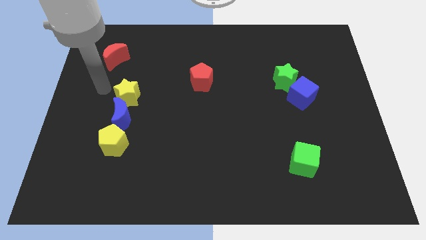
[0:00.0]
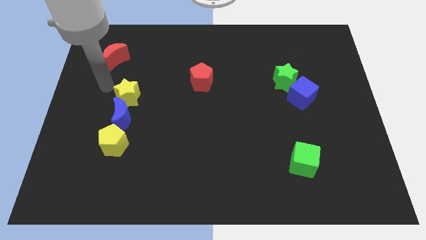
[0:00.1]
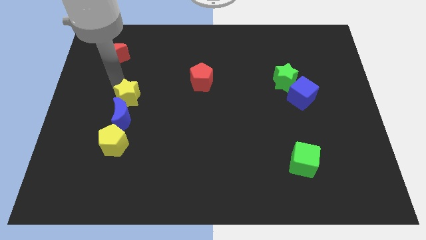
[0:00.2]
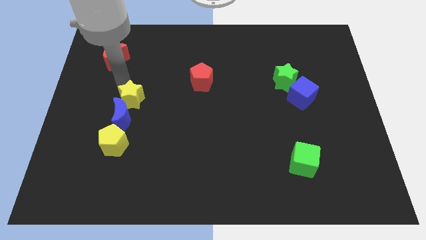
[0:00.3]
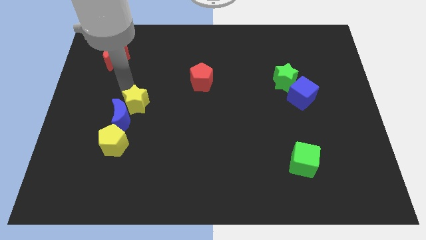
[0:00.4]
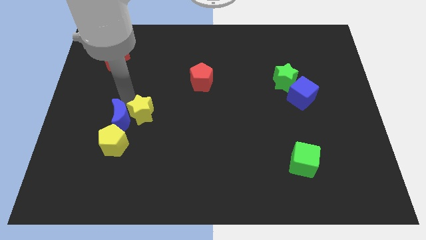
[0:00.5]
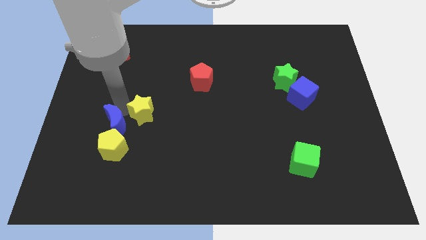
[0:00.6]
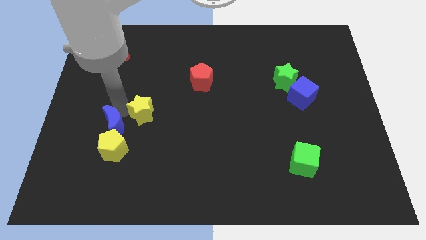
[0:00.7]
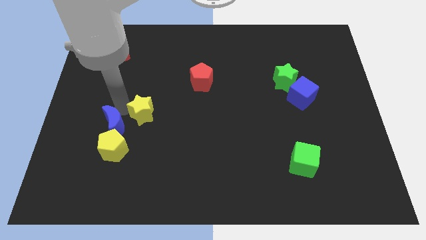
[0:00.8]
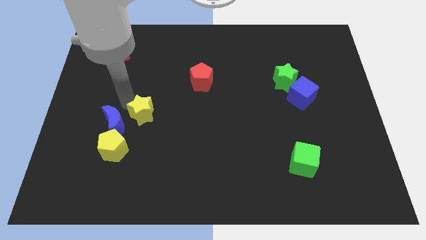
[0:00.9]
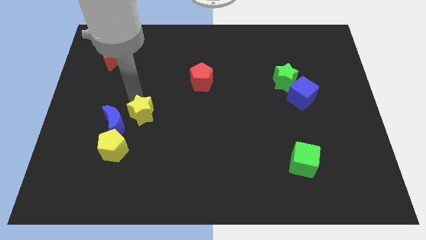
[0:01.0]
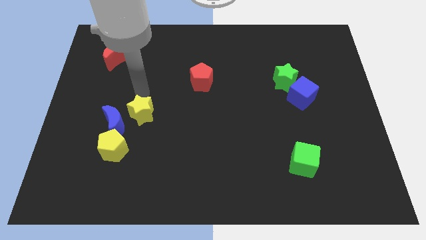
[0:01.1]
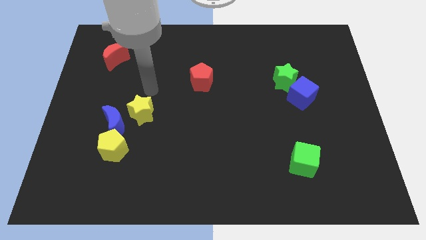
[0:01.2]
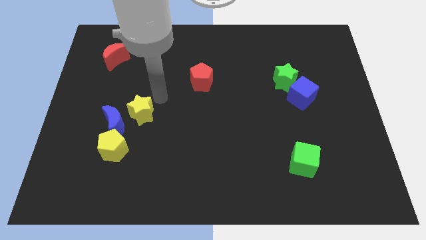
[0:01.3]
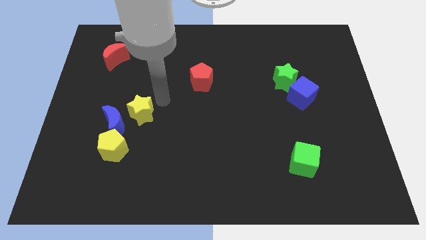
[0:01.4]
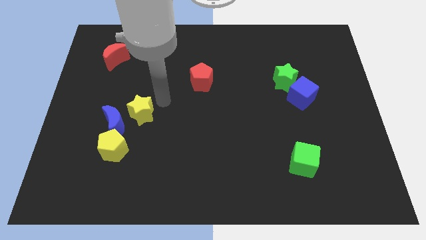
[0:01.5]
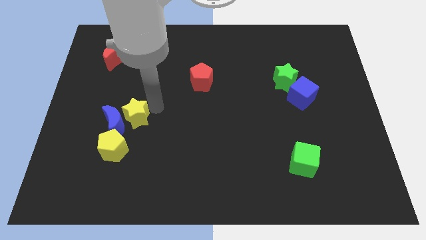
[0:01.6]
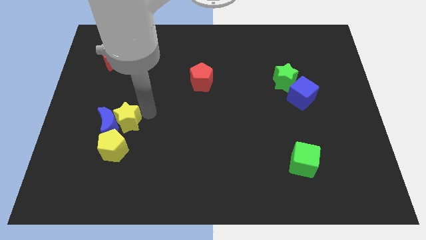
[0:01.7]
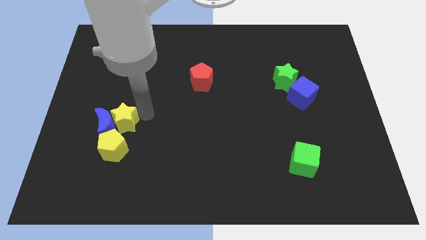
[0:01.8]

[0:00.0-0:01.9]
move yellow star into the blue moon

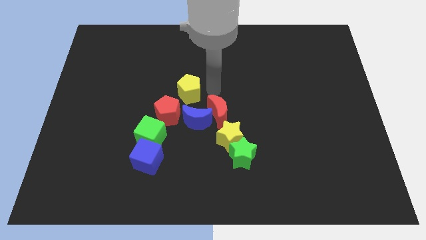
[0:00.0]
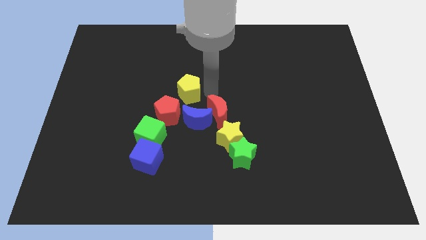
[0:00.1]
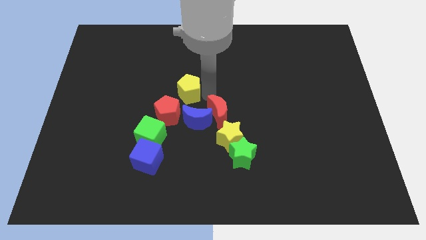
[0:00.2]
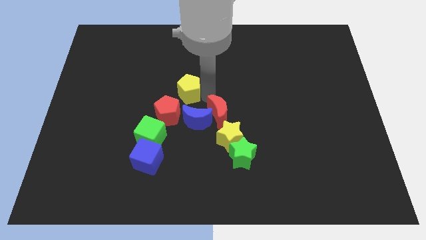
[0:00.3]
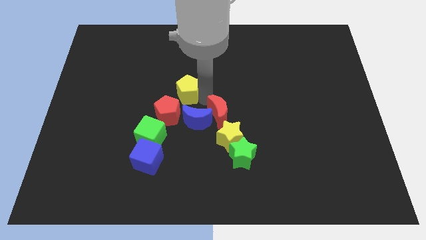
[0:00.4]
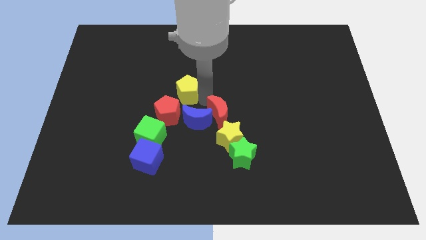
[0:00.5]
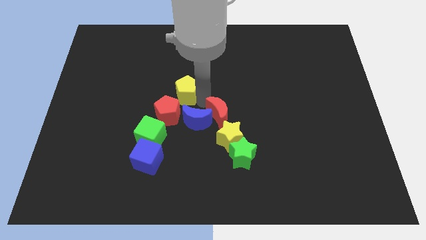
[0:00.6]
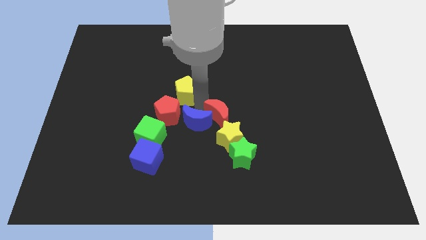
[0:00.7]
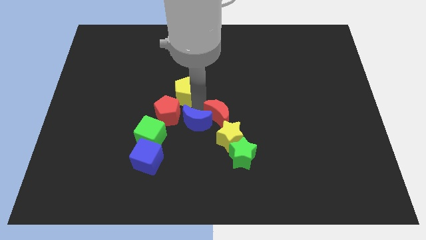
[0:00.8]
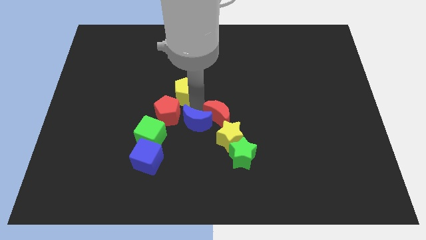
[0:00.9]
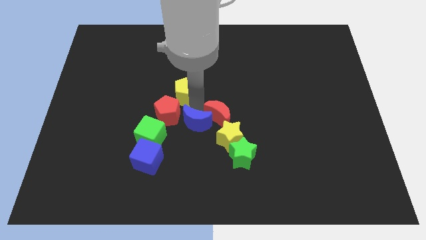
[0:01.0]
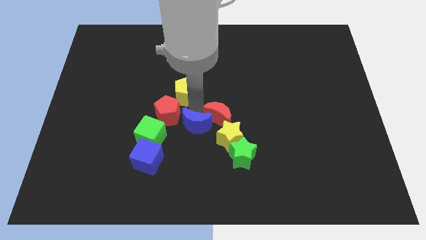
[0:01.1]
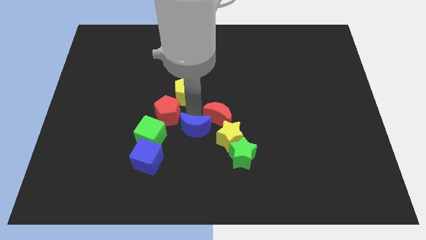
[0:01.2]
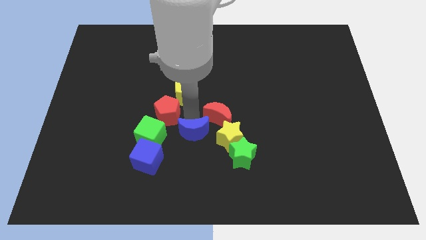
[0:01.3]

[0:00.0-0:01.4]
move the blue crescent slightly to the bottom

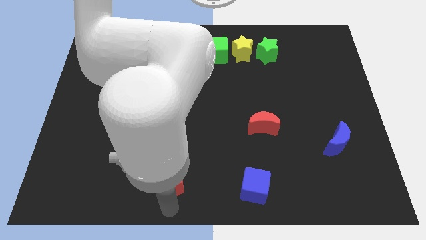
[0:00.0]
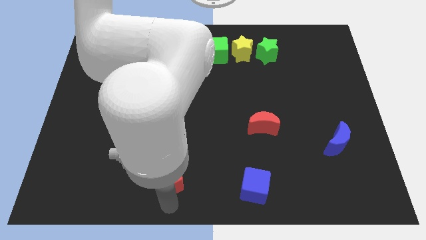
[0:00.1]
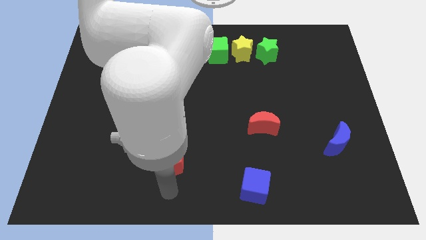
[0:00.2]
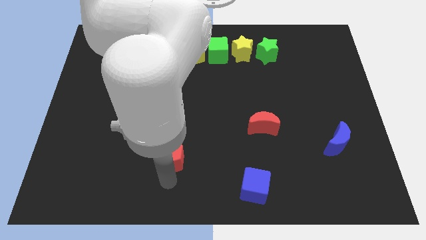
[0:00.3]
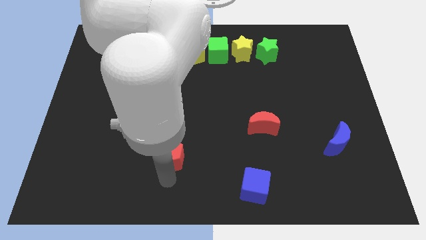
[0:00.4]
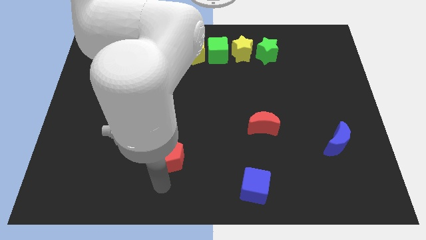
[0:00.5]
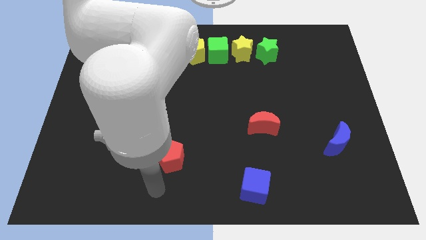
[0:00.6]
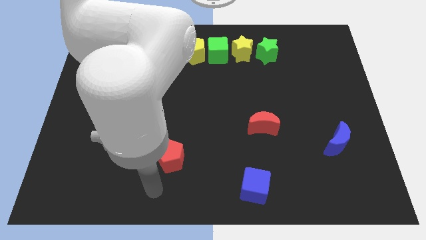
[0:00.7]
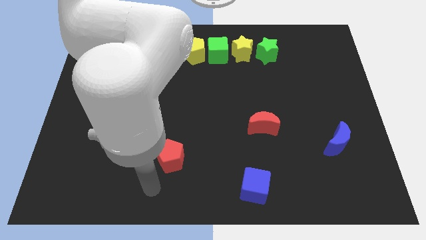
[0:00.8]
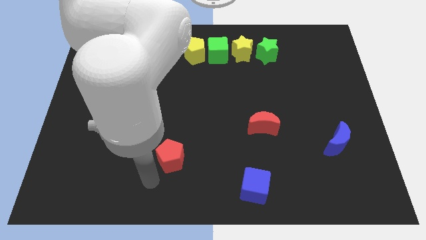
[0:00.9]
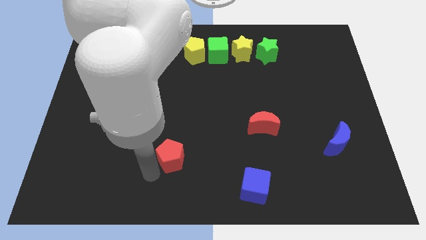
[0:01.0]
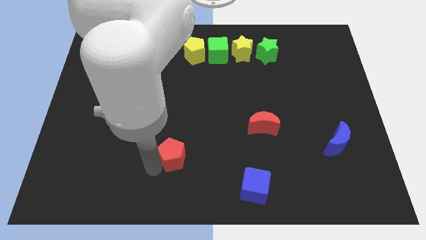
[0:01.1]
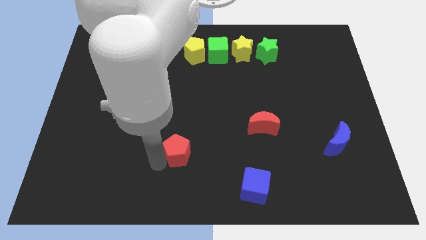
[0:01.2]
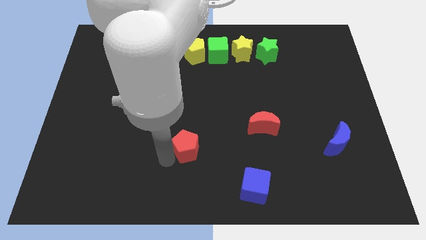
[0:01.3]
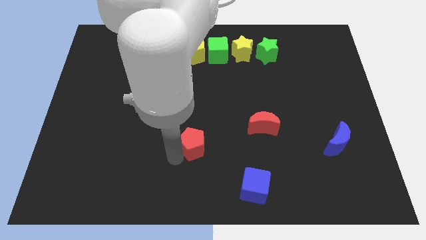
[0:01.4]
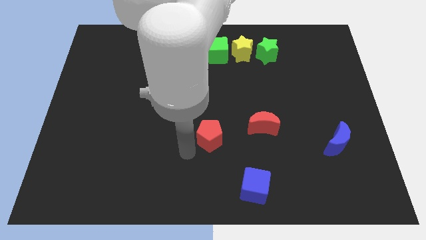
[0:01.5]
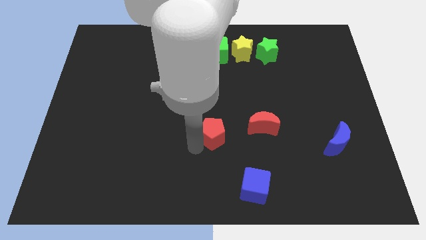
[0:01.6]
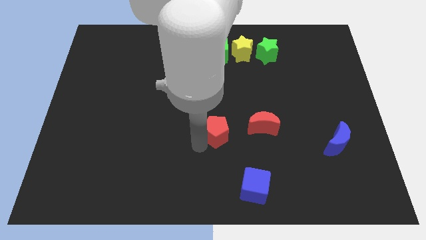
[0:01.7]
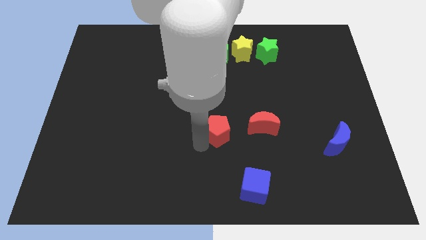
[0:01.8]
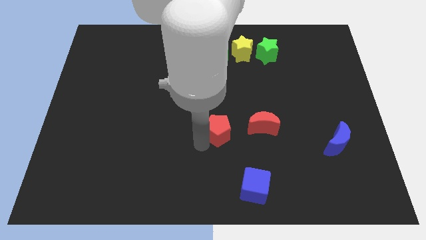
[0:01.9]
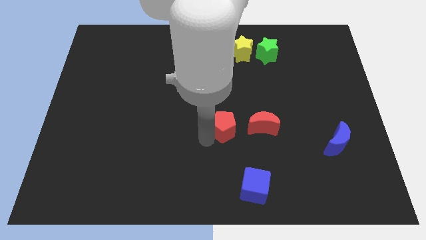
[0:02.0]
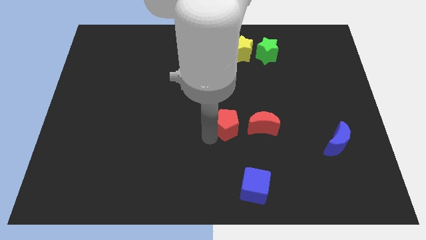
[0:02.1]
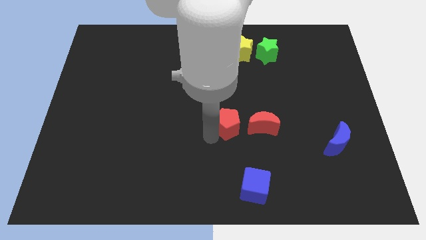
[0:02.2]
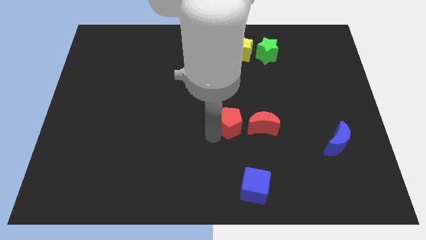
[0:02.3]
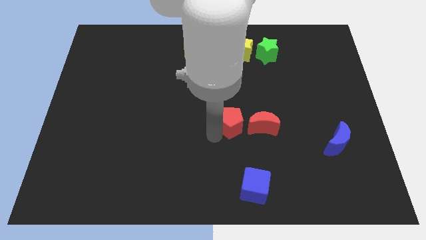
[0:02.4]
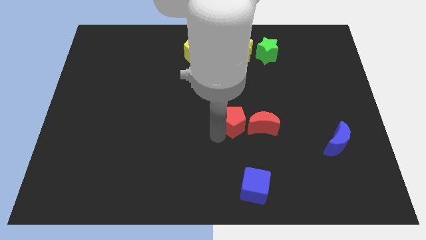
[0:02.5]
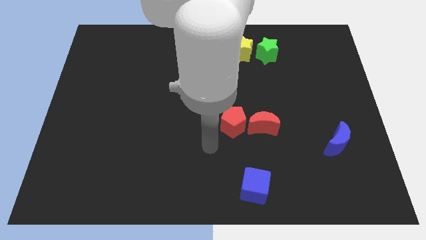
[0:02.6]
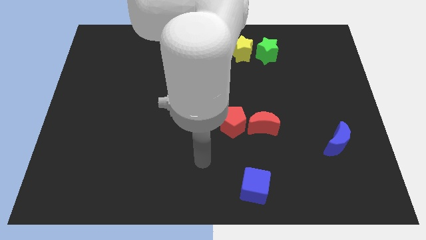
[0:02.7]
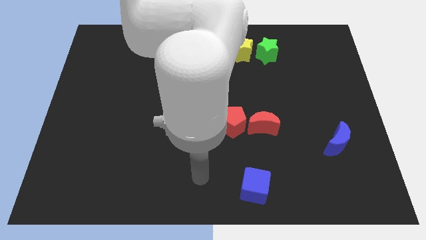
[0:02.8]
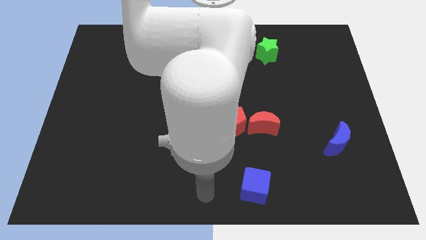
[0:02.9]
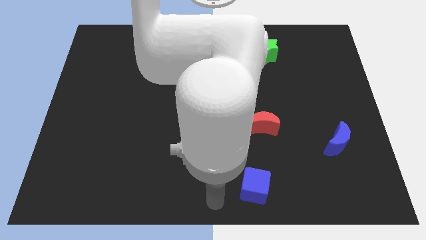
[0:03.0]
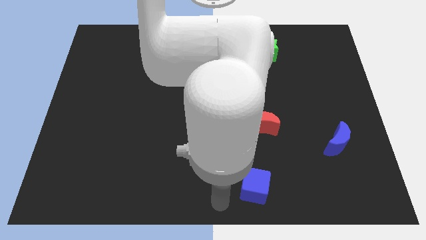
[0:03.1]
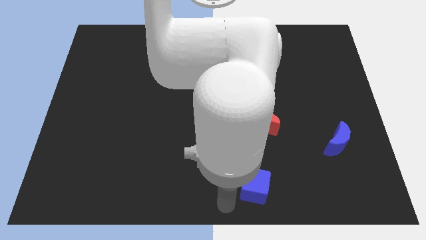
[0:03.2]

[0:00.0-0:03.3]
place red pentagon to the left of red crescent

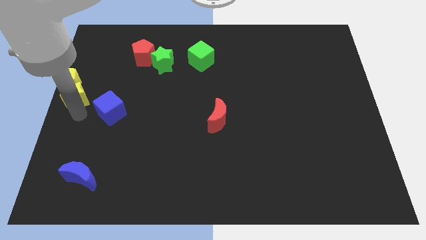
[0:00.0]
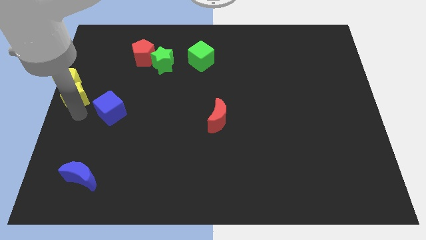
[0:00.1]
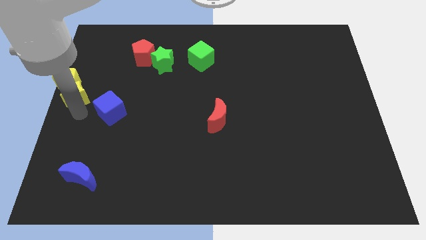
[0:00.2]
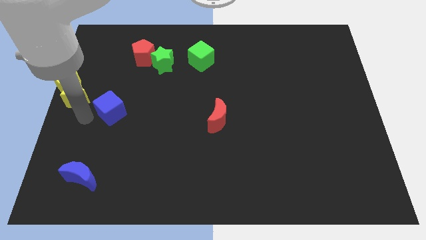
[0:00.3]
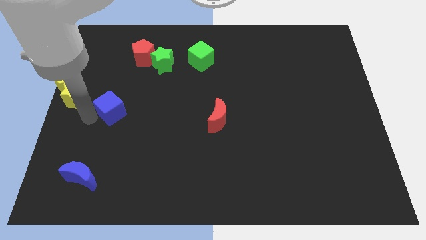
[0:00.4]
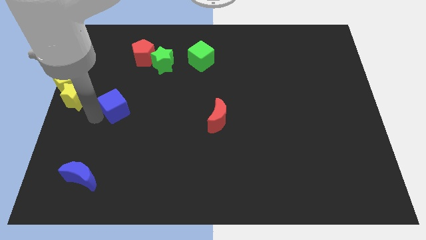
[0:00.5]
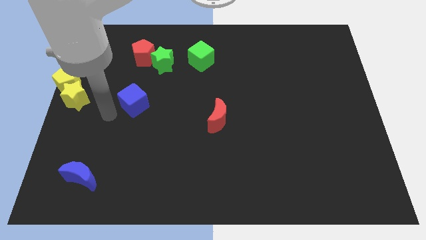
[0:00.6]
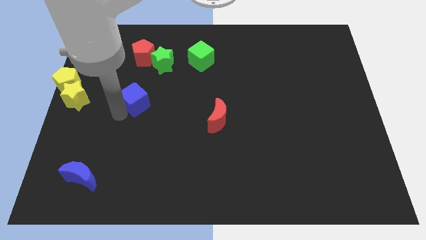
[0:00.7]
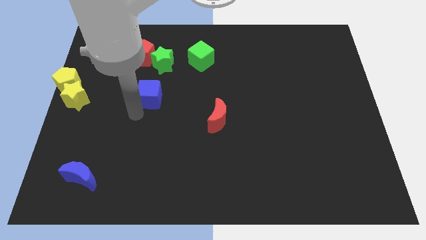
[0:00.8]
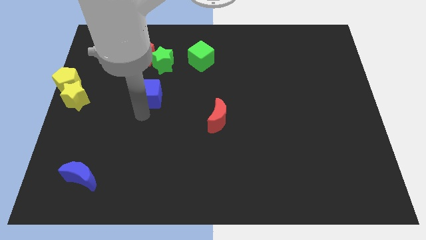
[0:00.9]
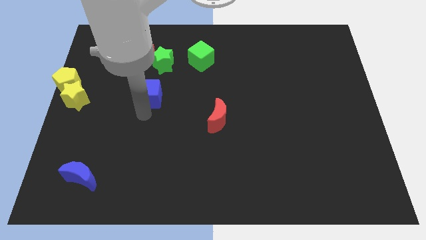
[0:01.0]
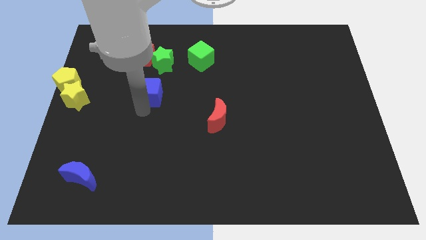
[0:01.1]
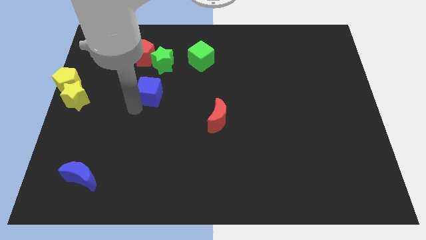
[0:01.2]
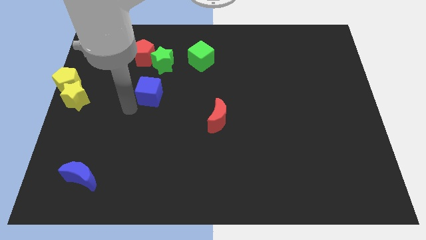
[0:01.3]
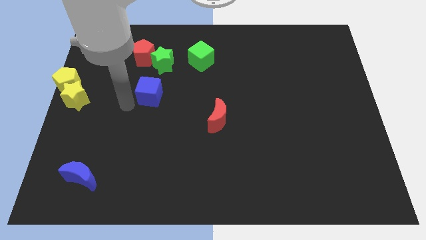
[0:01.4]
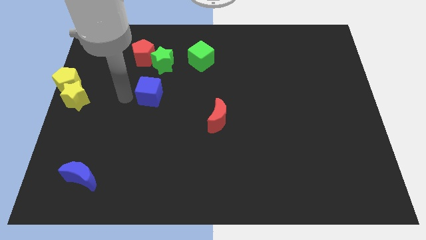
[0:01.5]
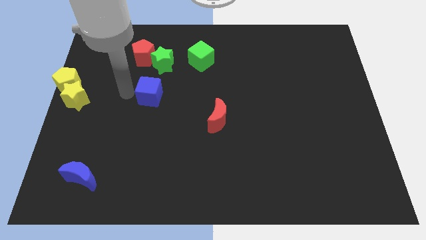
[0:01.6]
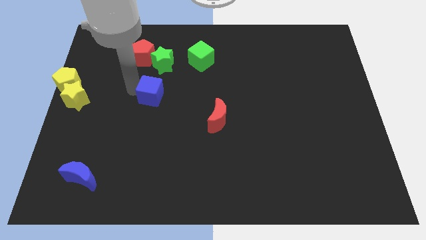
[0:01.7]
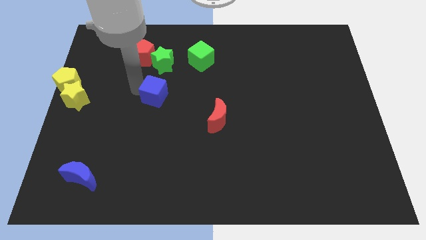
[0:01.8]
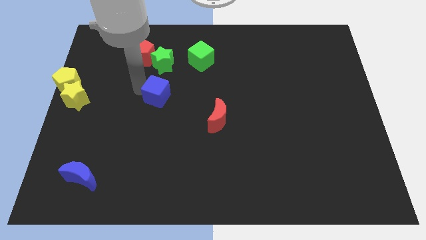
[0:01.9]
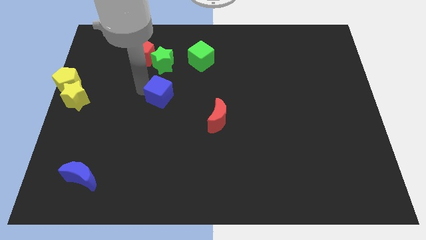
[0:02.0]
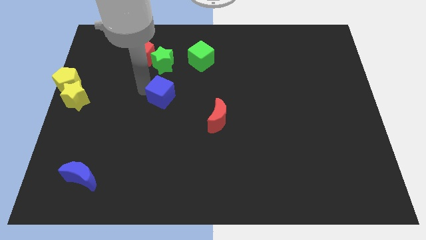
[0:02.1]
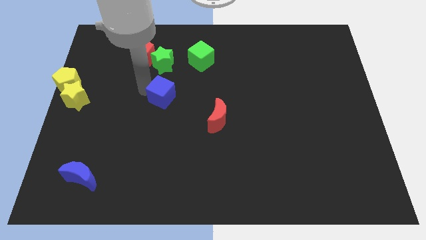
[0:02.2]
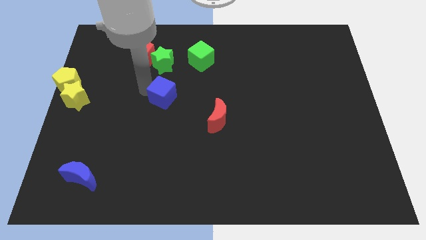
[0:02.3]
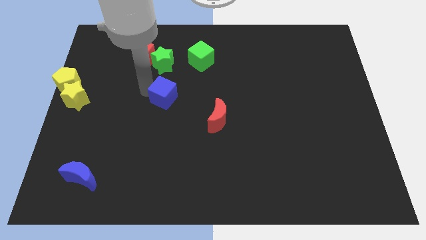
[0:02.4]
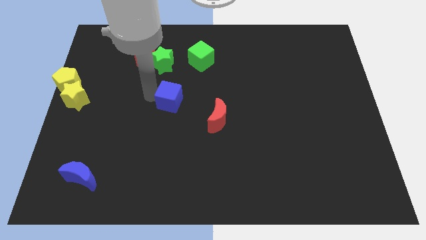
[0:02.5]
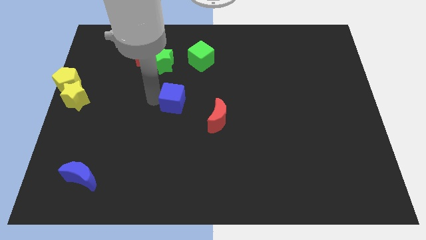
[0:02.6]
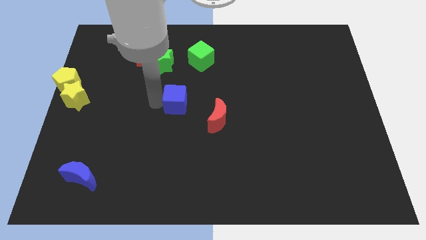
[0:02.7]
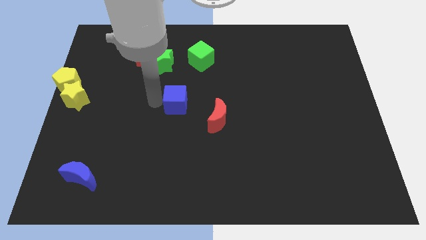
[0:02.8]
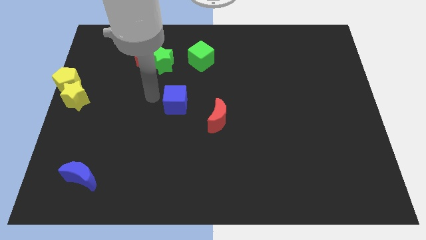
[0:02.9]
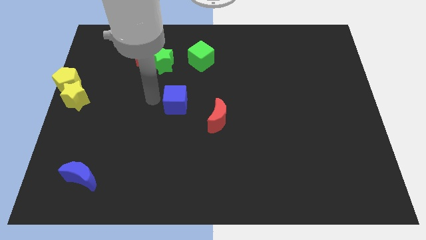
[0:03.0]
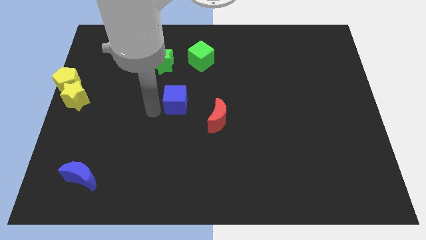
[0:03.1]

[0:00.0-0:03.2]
move the blue cube towards the center of the board
